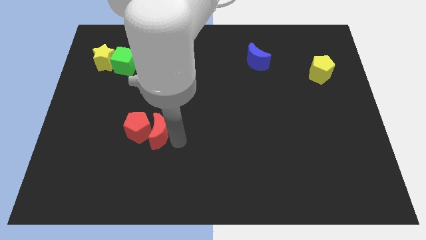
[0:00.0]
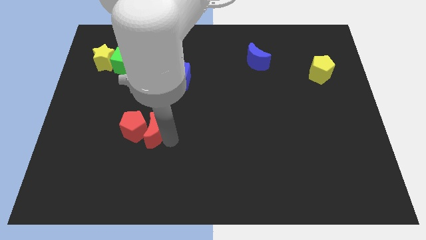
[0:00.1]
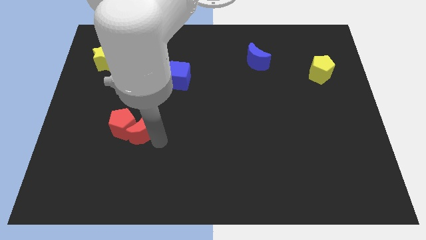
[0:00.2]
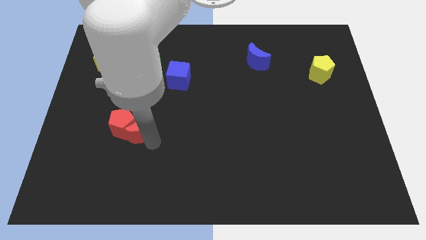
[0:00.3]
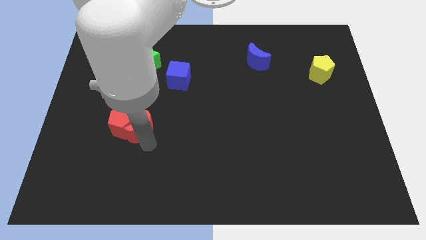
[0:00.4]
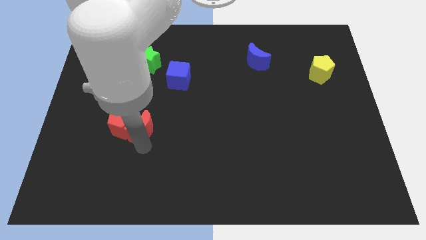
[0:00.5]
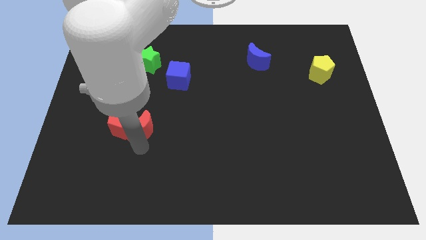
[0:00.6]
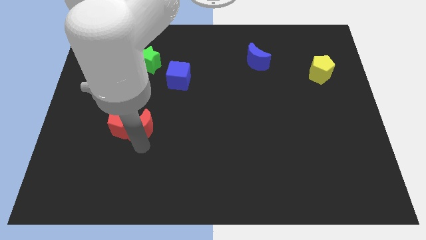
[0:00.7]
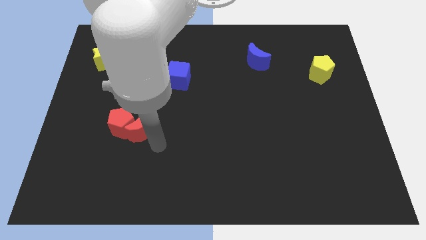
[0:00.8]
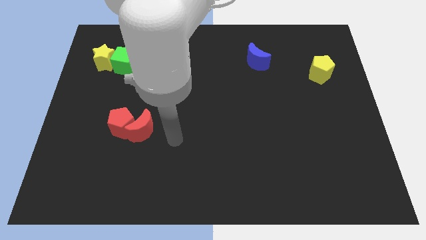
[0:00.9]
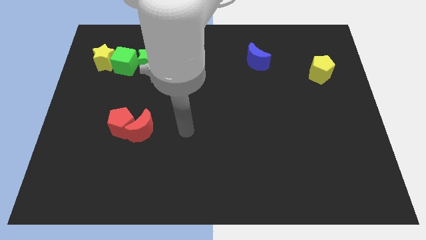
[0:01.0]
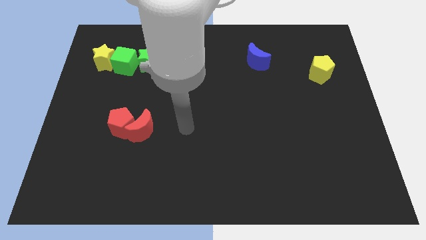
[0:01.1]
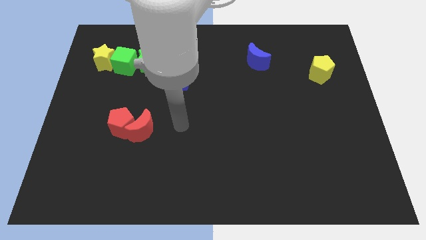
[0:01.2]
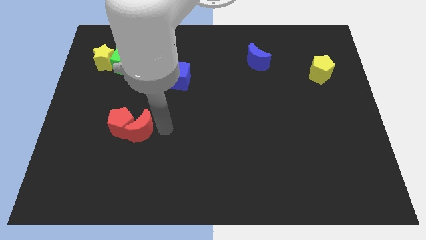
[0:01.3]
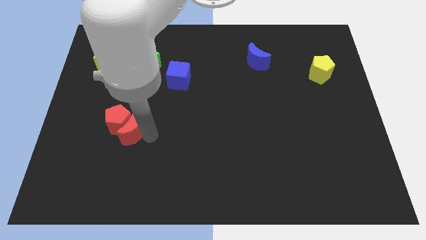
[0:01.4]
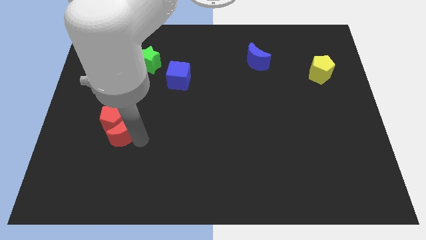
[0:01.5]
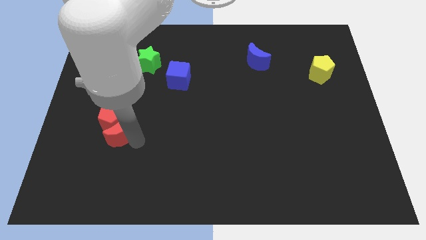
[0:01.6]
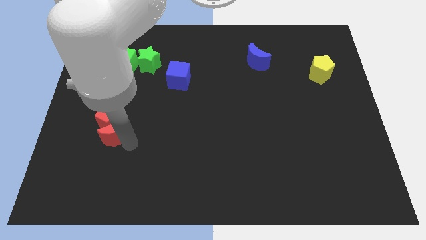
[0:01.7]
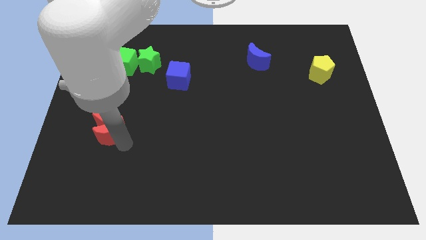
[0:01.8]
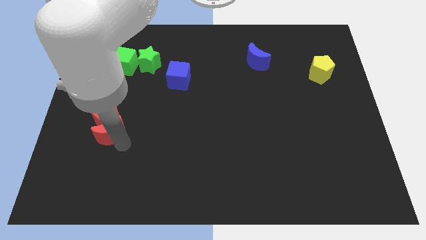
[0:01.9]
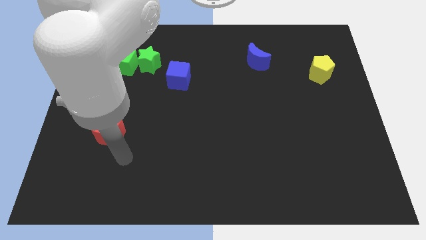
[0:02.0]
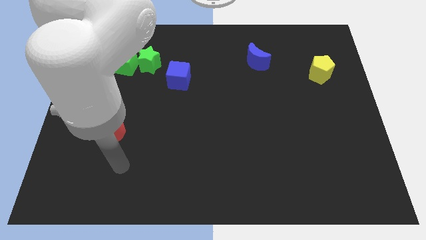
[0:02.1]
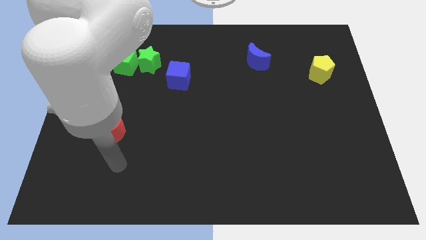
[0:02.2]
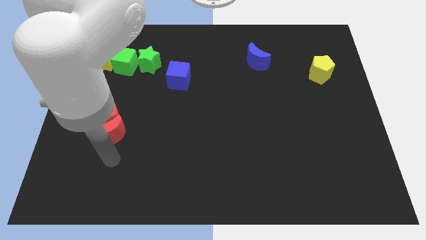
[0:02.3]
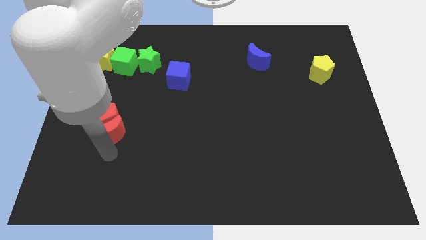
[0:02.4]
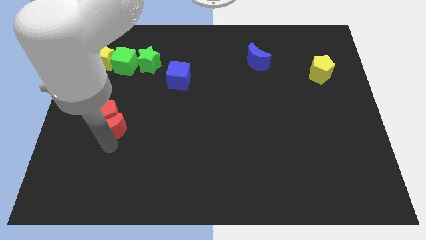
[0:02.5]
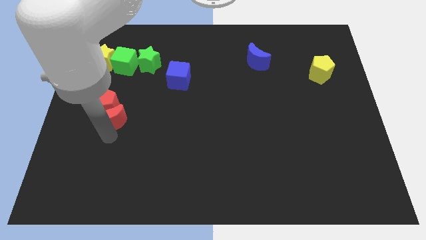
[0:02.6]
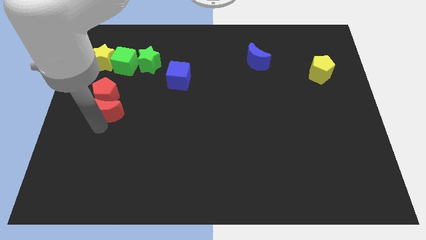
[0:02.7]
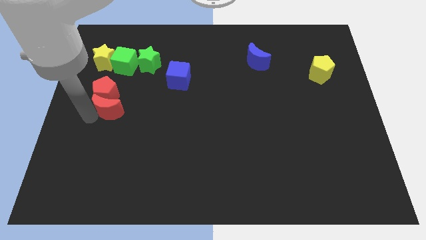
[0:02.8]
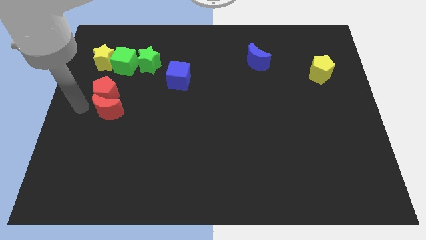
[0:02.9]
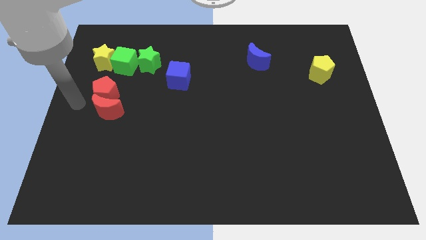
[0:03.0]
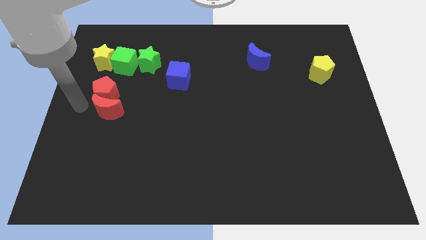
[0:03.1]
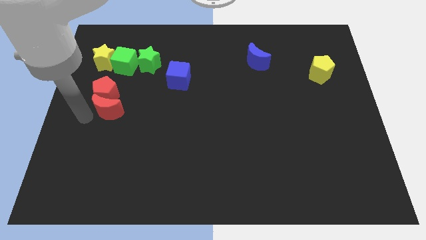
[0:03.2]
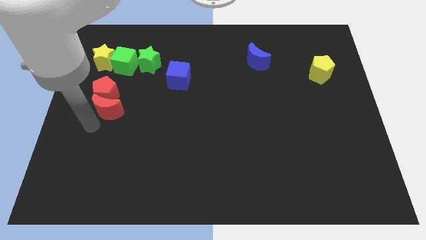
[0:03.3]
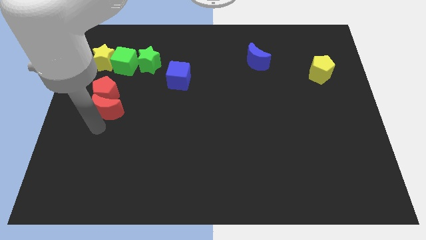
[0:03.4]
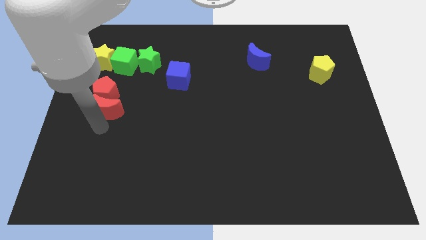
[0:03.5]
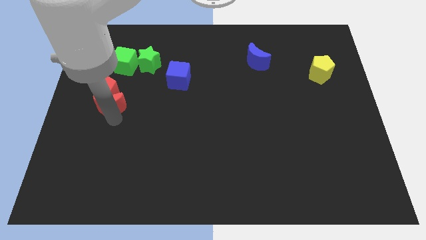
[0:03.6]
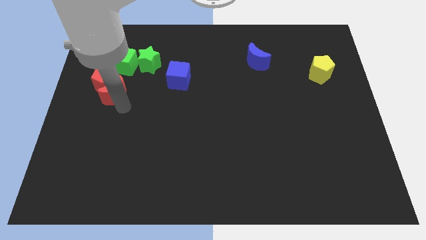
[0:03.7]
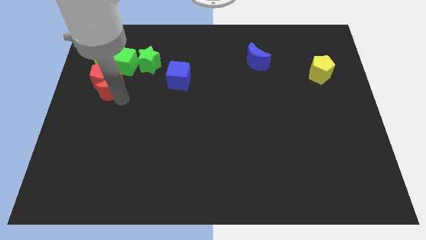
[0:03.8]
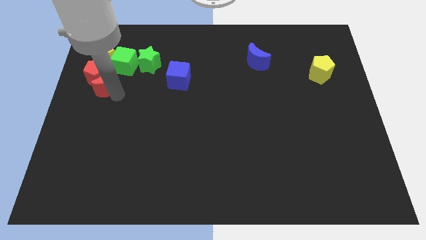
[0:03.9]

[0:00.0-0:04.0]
push the red pentagon and red moon towards the yellow star

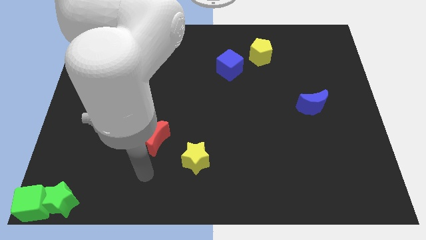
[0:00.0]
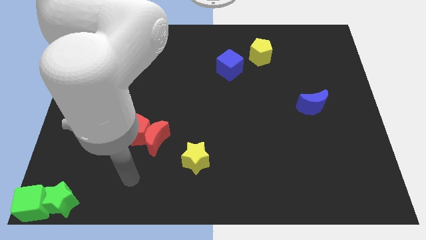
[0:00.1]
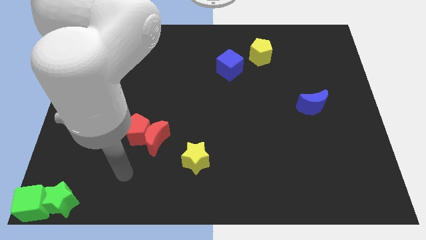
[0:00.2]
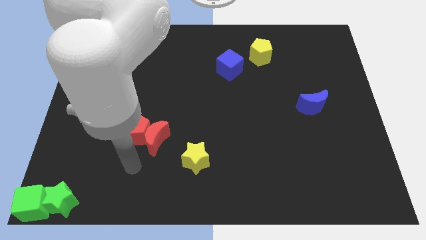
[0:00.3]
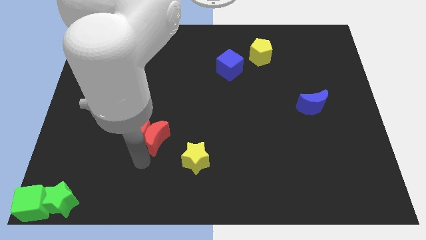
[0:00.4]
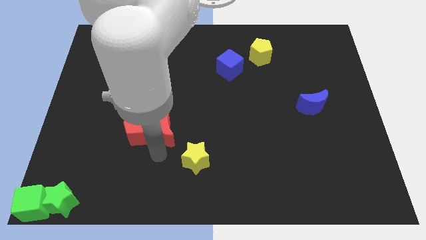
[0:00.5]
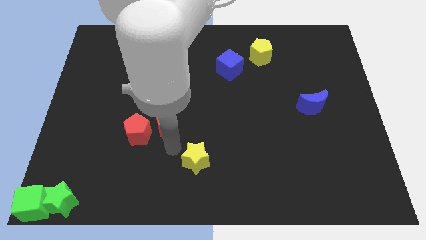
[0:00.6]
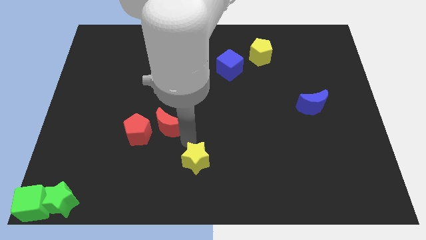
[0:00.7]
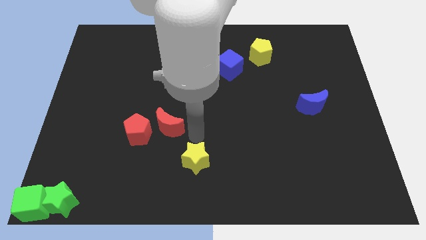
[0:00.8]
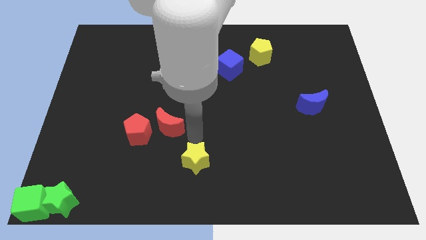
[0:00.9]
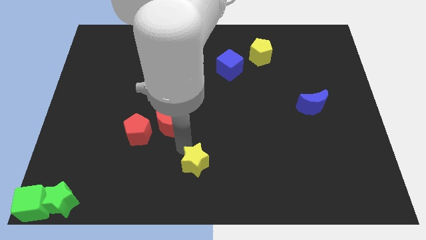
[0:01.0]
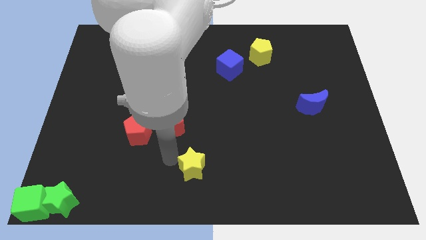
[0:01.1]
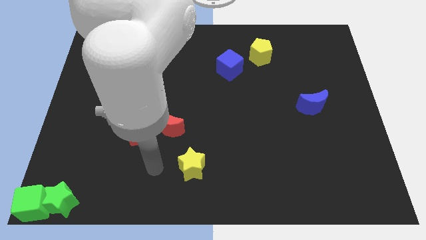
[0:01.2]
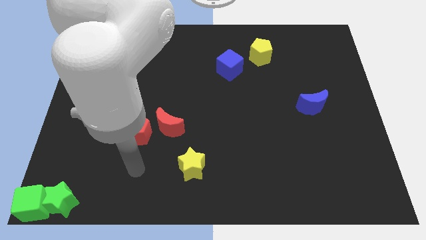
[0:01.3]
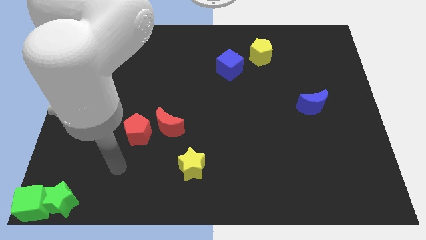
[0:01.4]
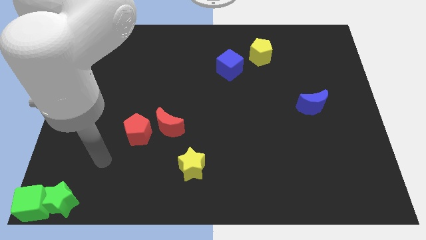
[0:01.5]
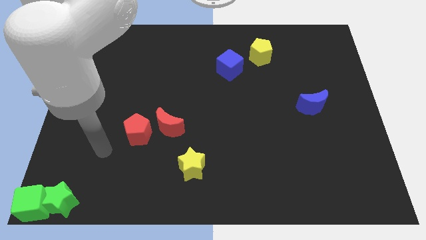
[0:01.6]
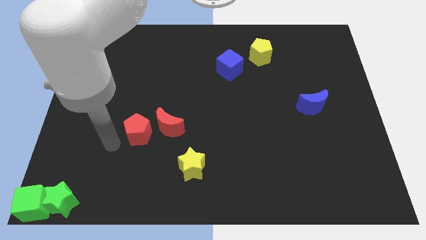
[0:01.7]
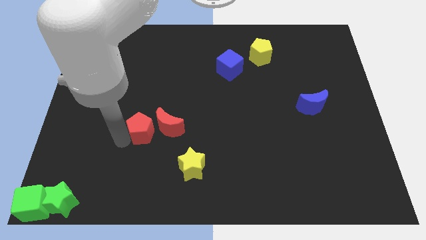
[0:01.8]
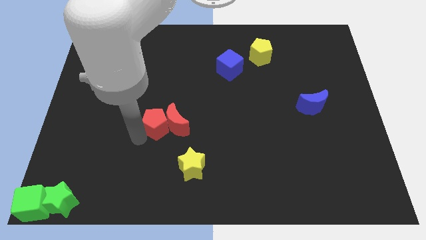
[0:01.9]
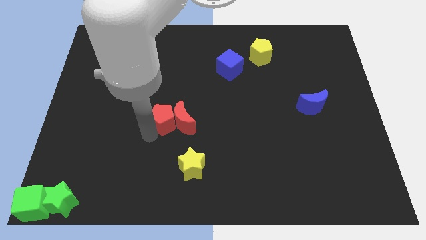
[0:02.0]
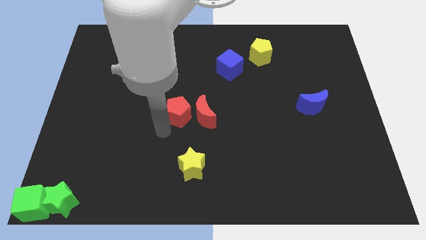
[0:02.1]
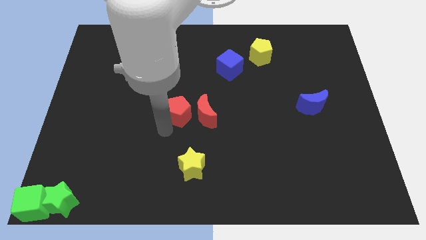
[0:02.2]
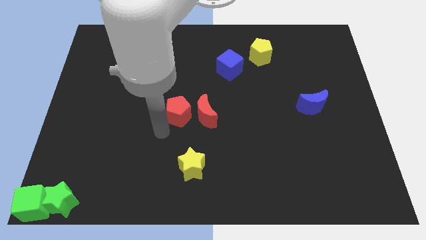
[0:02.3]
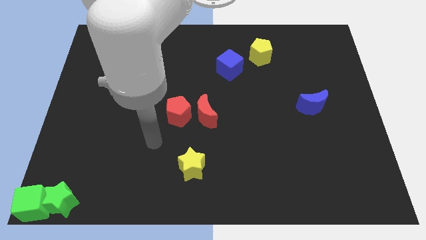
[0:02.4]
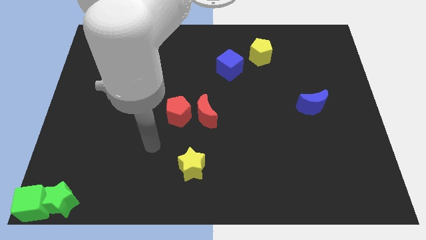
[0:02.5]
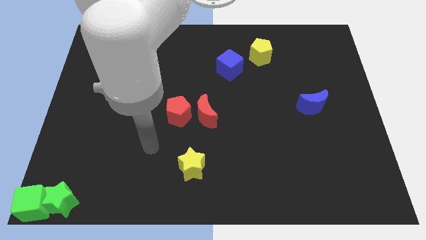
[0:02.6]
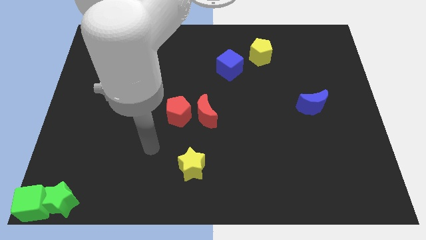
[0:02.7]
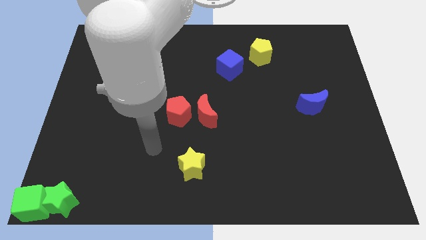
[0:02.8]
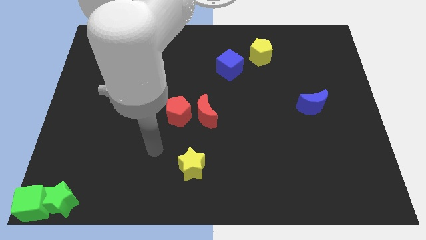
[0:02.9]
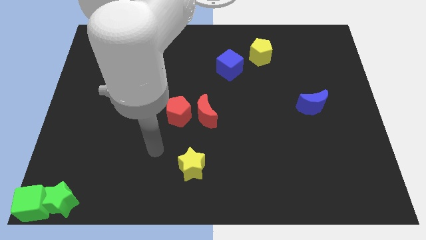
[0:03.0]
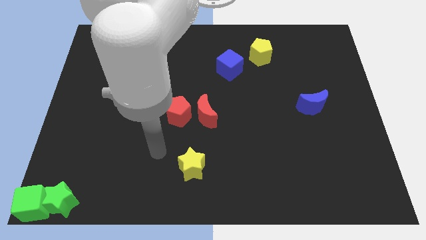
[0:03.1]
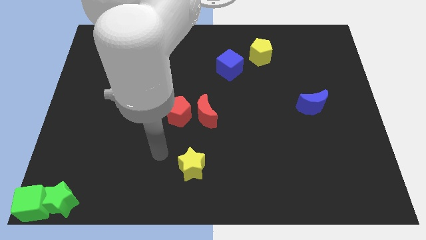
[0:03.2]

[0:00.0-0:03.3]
place the red blocks above yellow star

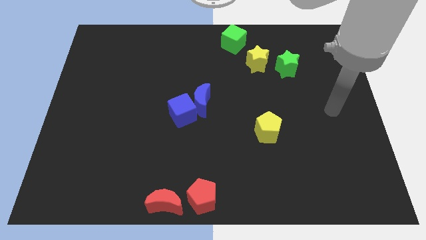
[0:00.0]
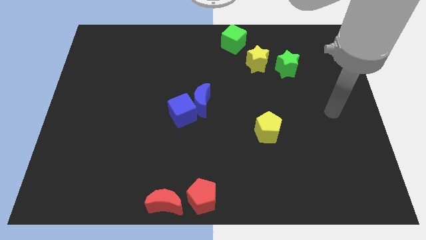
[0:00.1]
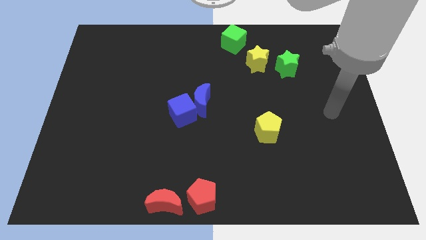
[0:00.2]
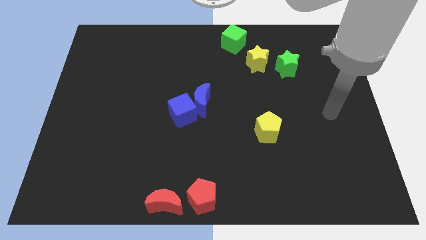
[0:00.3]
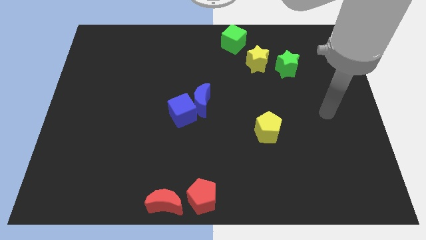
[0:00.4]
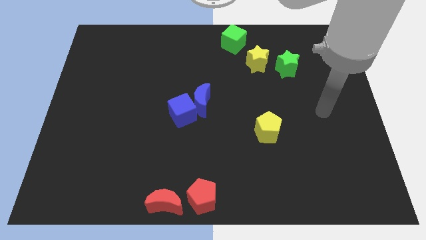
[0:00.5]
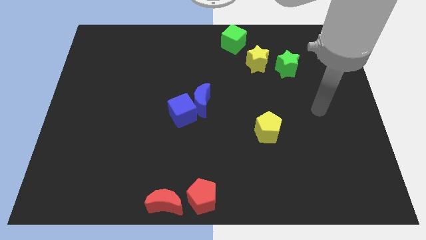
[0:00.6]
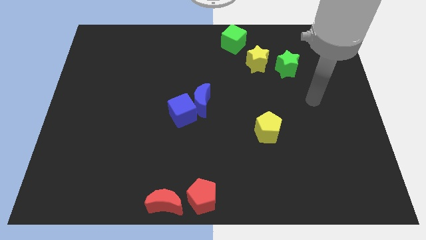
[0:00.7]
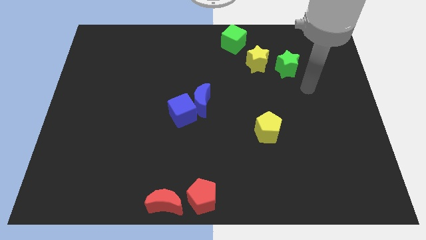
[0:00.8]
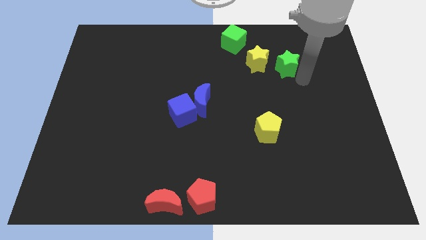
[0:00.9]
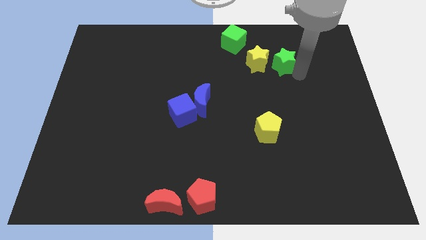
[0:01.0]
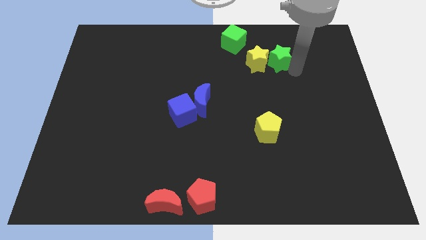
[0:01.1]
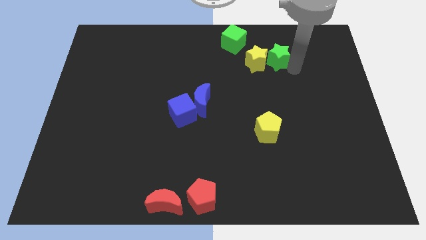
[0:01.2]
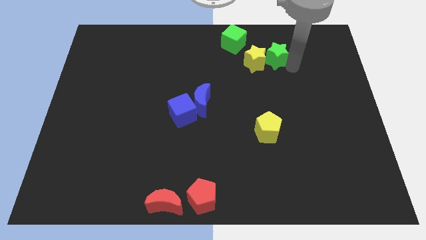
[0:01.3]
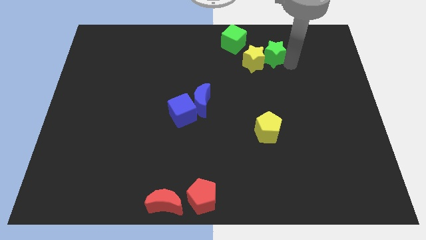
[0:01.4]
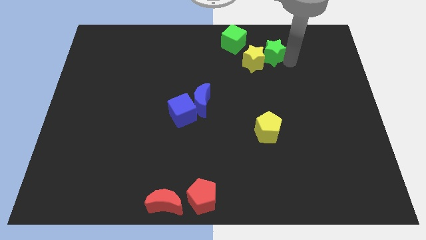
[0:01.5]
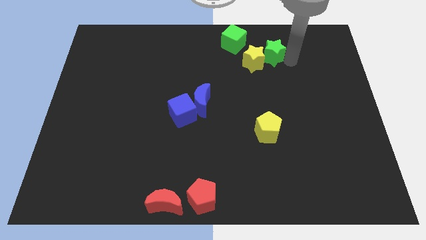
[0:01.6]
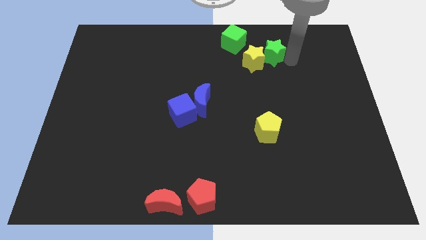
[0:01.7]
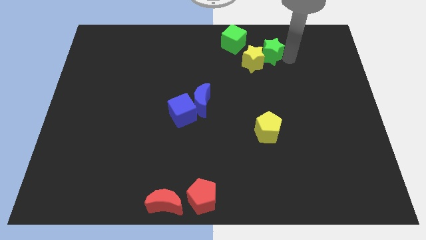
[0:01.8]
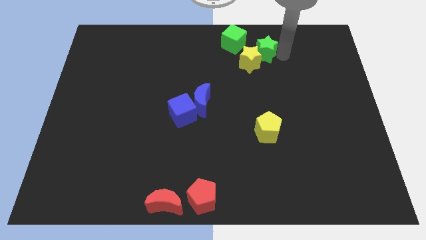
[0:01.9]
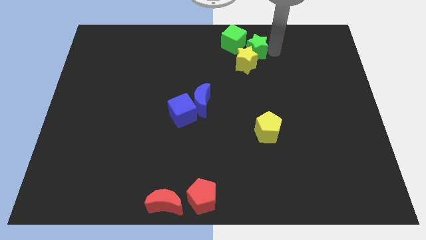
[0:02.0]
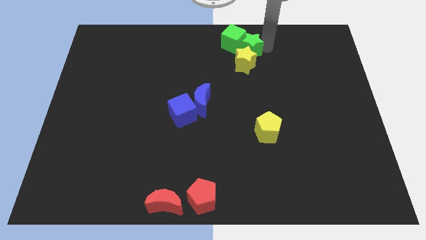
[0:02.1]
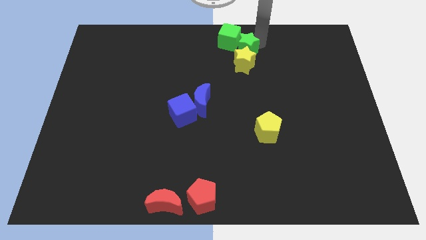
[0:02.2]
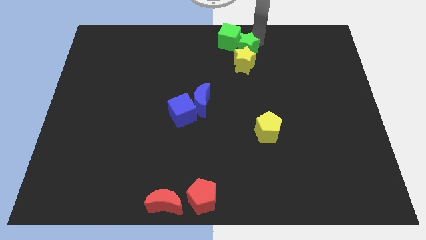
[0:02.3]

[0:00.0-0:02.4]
move green star right of the green block
